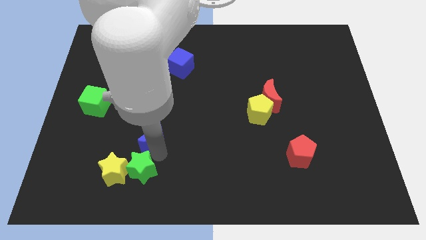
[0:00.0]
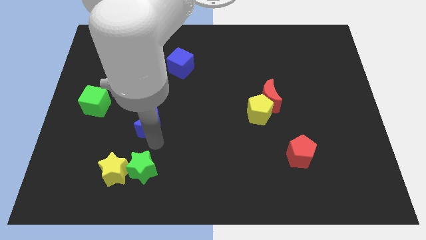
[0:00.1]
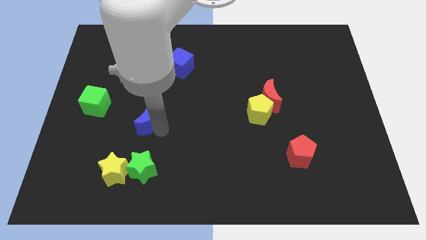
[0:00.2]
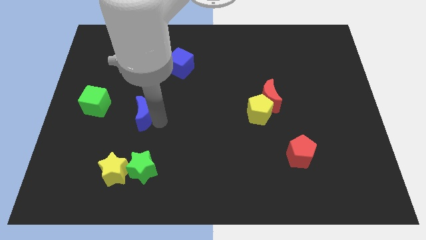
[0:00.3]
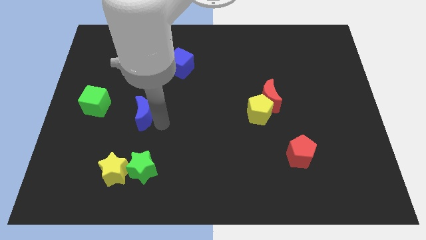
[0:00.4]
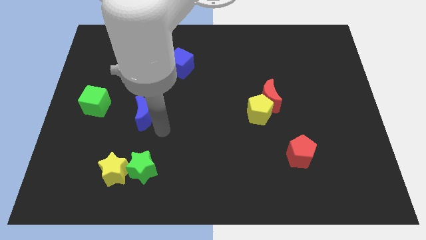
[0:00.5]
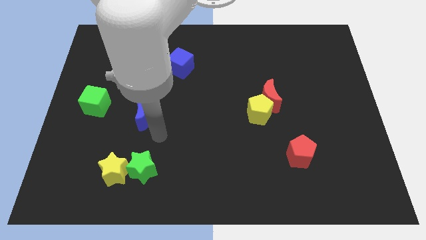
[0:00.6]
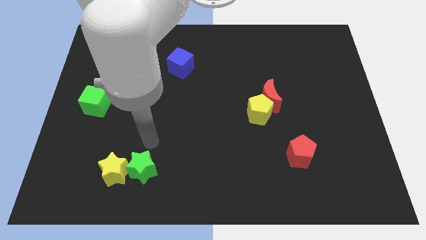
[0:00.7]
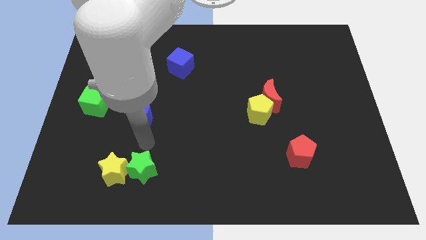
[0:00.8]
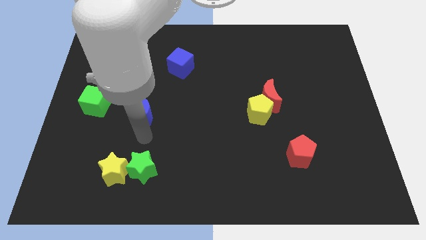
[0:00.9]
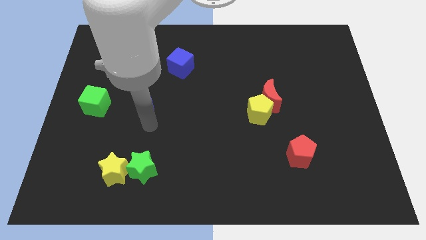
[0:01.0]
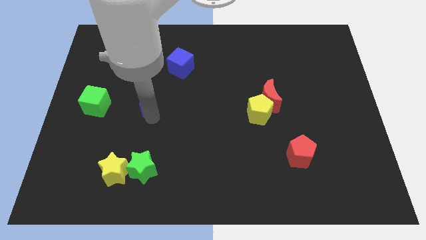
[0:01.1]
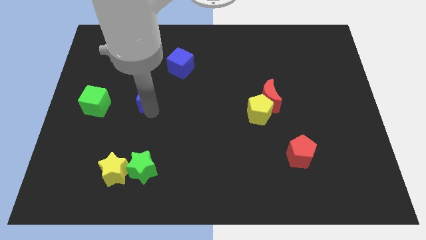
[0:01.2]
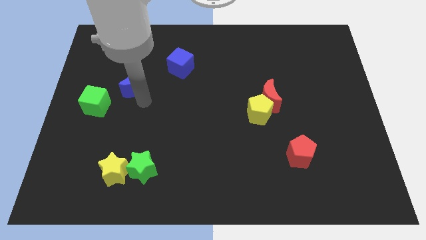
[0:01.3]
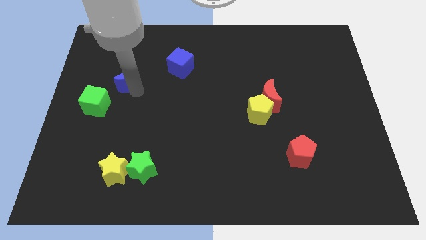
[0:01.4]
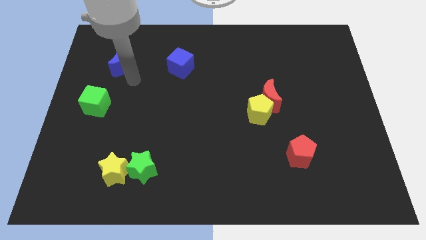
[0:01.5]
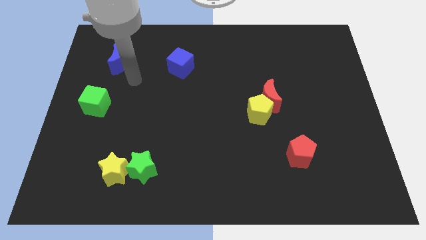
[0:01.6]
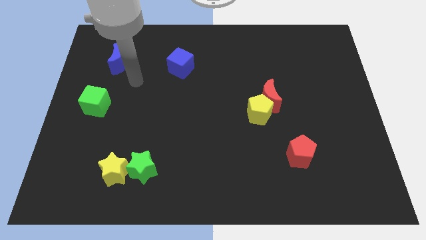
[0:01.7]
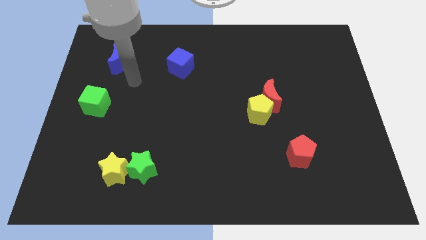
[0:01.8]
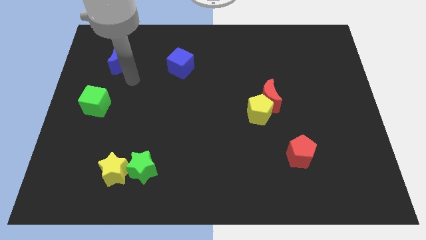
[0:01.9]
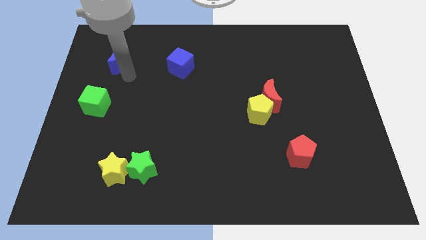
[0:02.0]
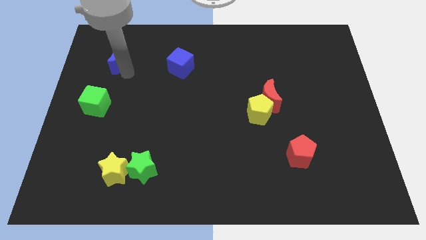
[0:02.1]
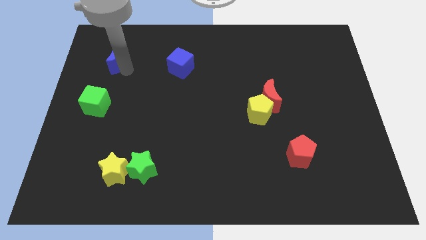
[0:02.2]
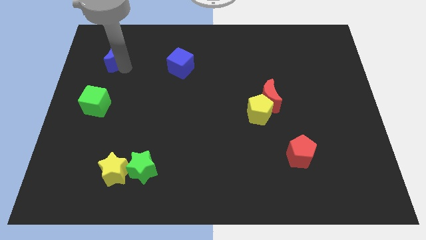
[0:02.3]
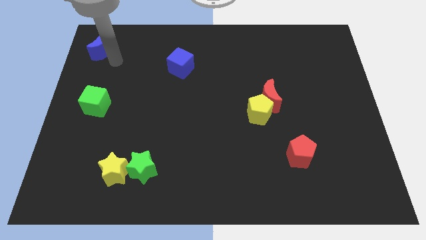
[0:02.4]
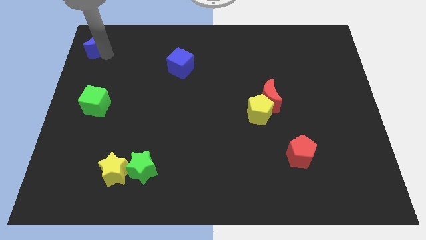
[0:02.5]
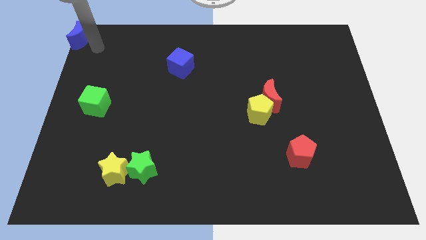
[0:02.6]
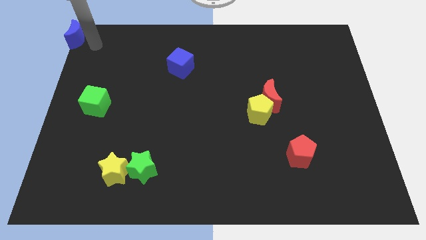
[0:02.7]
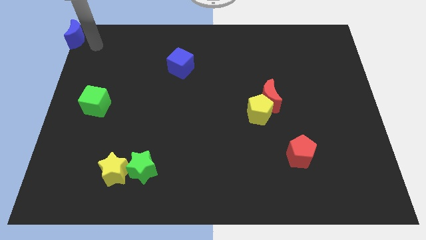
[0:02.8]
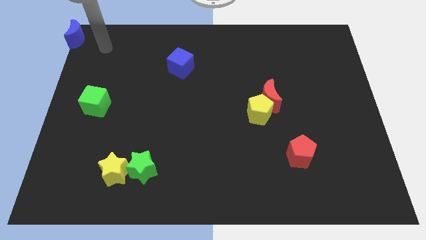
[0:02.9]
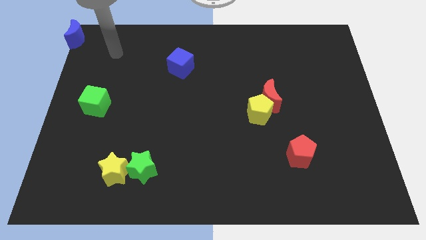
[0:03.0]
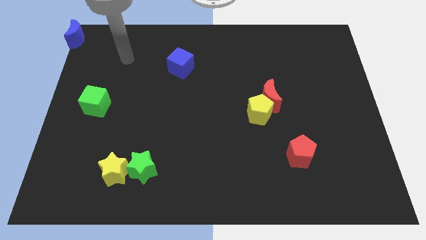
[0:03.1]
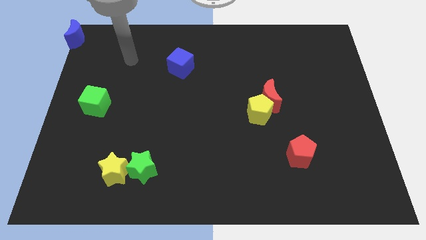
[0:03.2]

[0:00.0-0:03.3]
move the blue crescent to the top left of the board

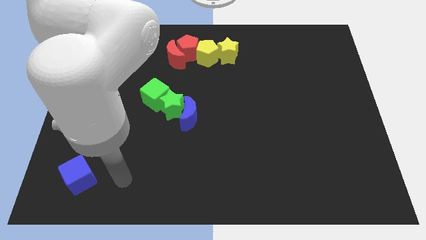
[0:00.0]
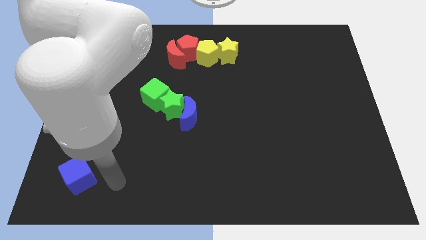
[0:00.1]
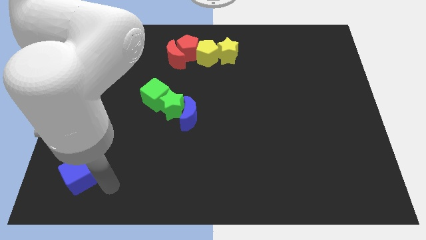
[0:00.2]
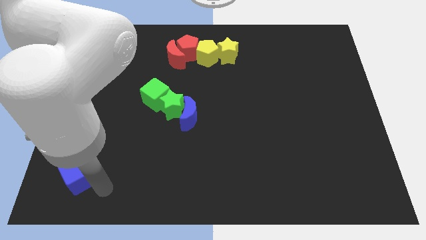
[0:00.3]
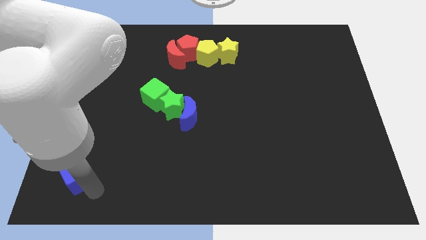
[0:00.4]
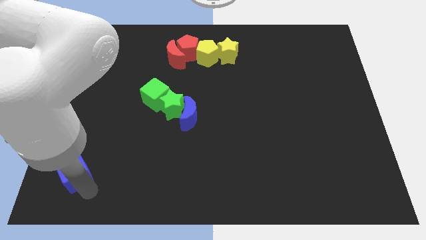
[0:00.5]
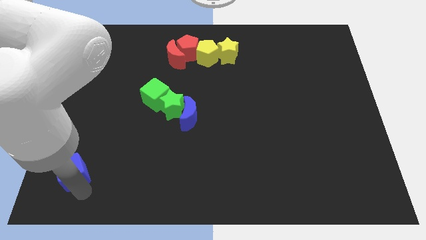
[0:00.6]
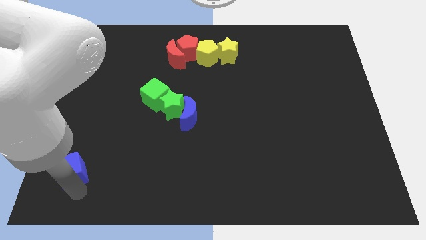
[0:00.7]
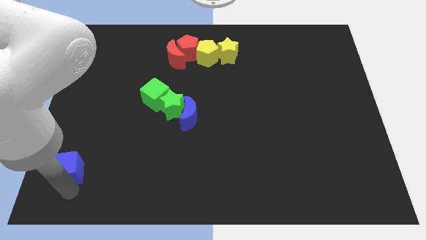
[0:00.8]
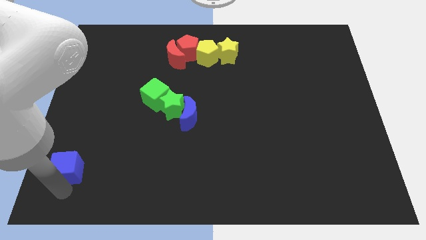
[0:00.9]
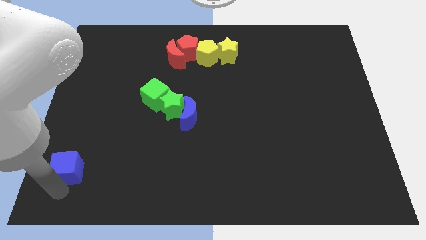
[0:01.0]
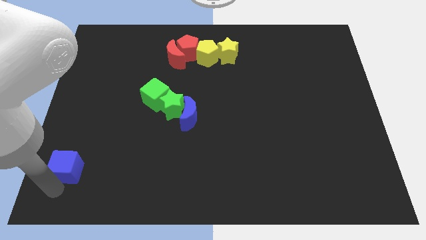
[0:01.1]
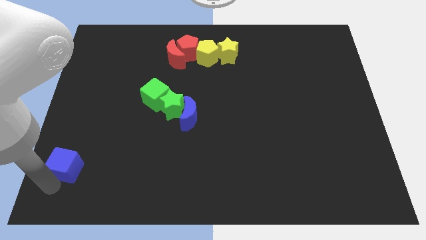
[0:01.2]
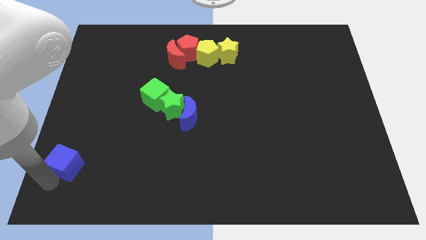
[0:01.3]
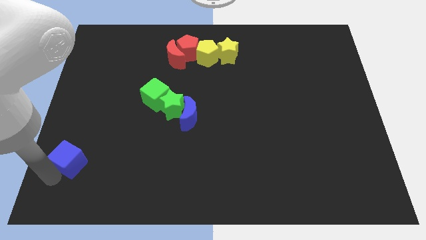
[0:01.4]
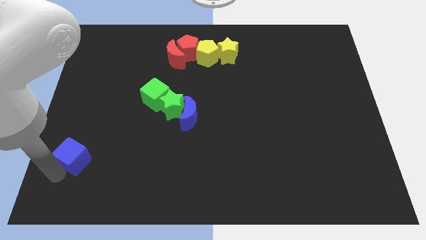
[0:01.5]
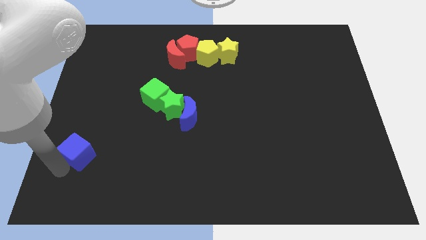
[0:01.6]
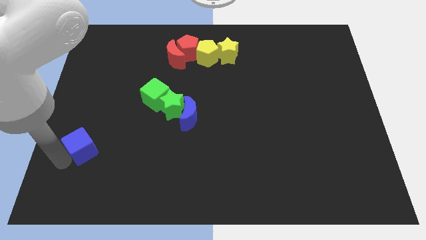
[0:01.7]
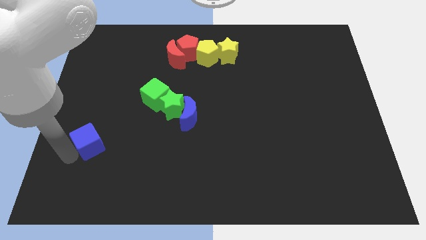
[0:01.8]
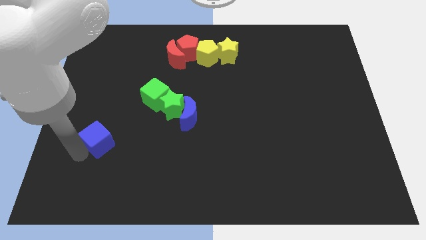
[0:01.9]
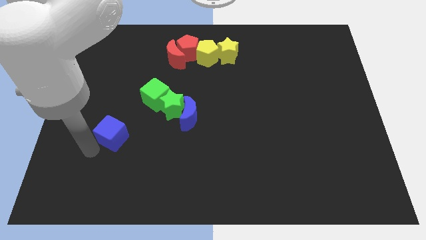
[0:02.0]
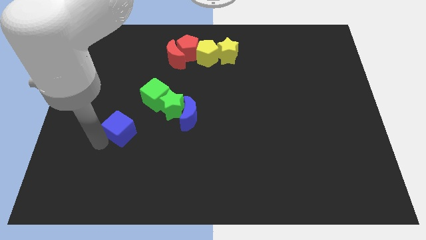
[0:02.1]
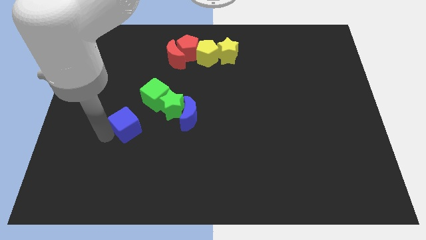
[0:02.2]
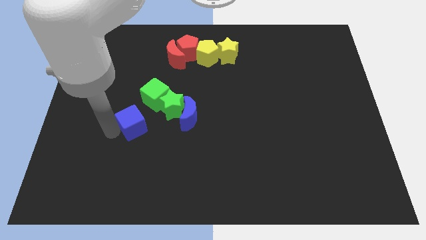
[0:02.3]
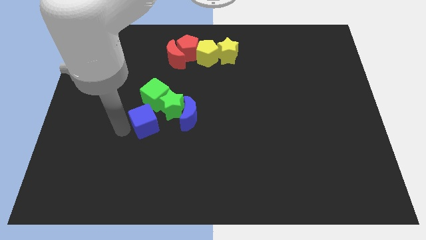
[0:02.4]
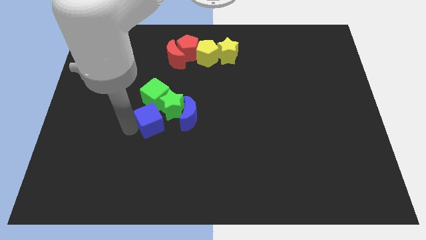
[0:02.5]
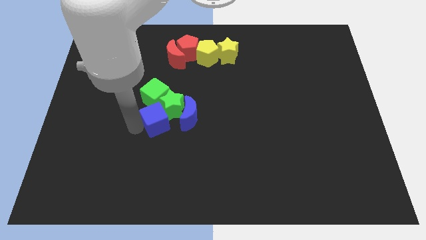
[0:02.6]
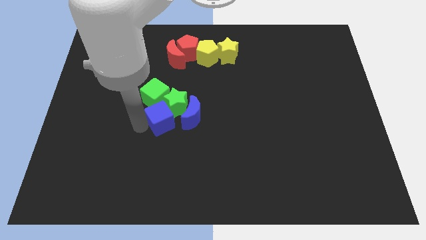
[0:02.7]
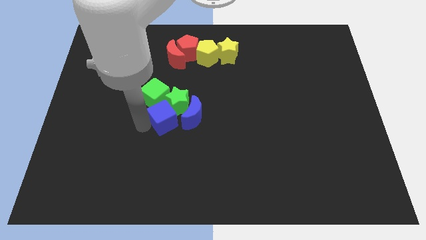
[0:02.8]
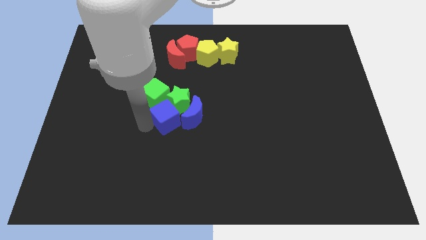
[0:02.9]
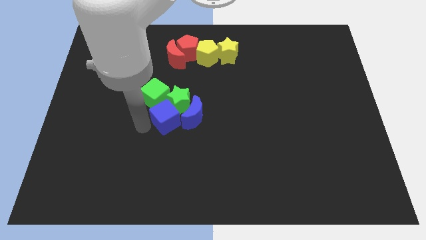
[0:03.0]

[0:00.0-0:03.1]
move the blue cube into the green star

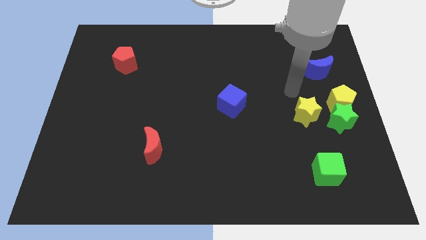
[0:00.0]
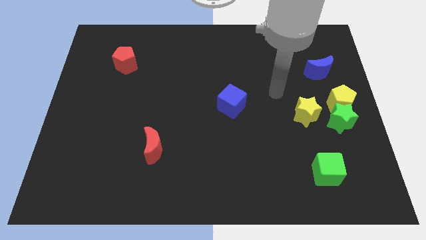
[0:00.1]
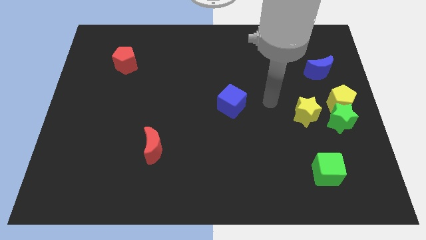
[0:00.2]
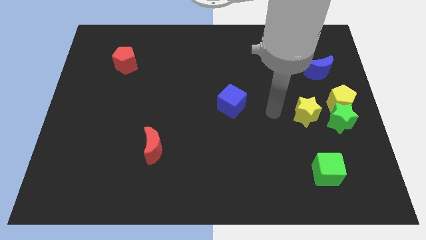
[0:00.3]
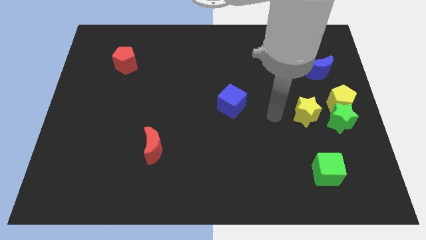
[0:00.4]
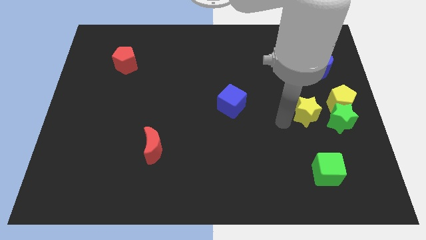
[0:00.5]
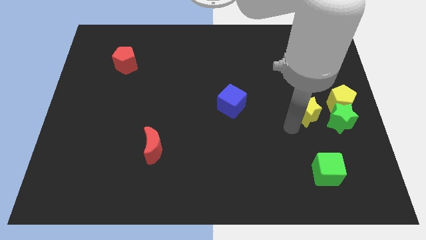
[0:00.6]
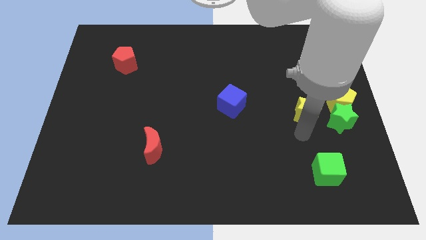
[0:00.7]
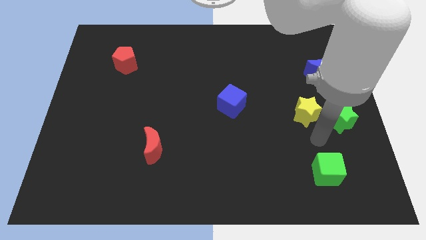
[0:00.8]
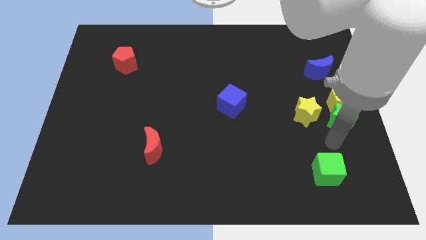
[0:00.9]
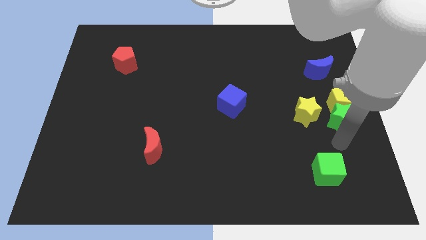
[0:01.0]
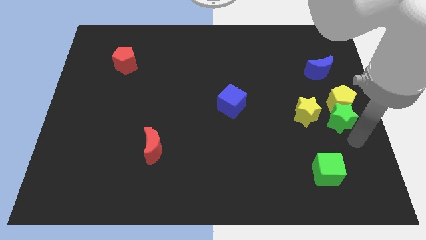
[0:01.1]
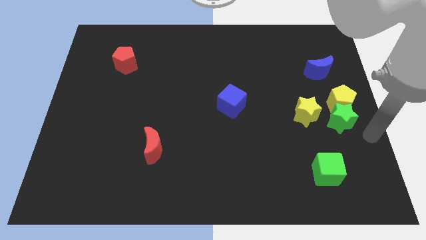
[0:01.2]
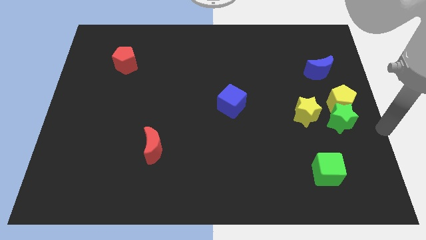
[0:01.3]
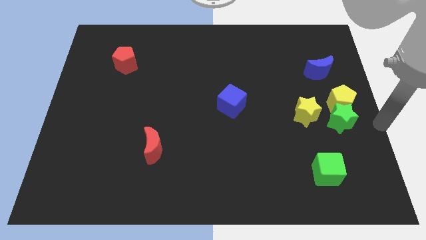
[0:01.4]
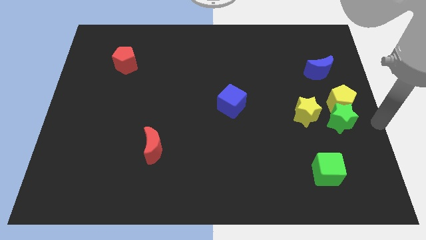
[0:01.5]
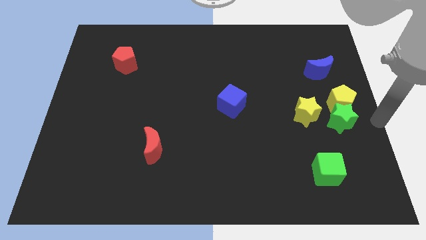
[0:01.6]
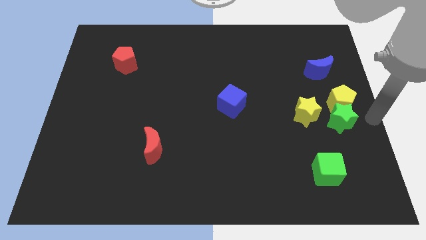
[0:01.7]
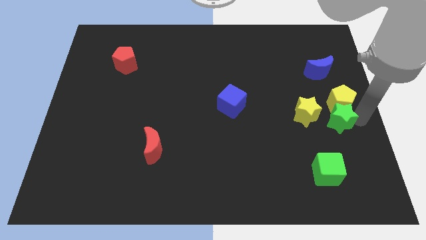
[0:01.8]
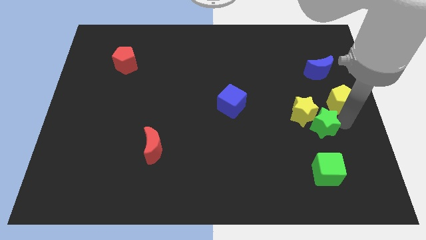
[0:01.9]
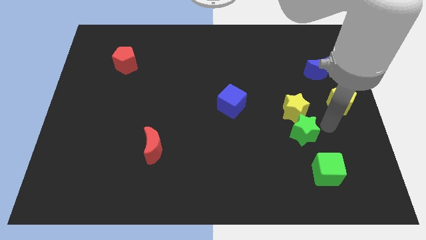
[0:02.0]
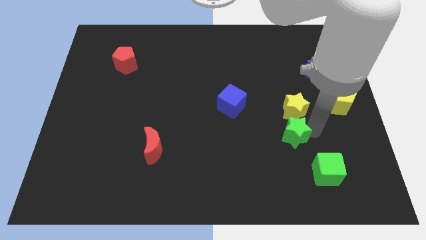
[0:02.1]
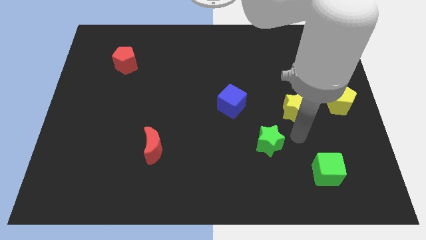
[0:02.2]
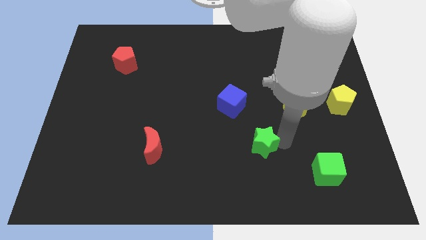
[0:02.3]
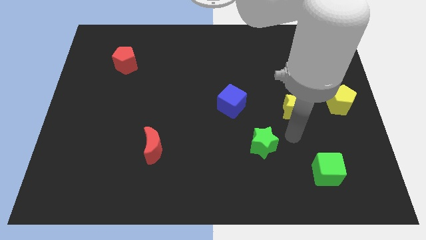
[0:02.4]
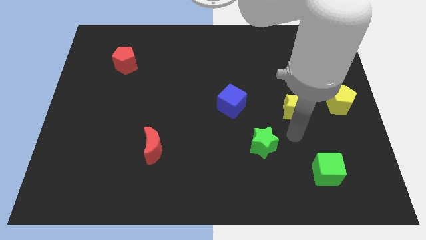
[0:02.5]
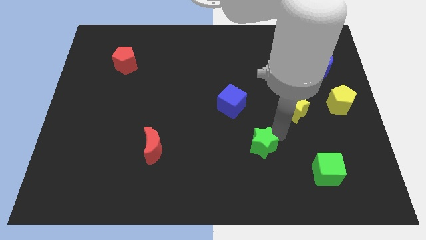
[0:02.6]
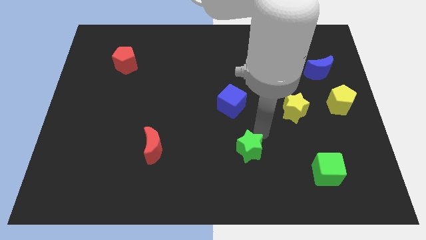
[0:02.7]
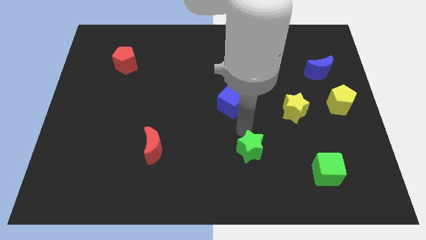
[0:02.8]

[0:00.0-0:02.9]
push the green star below the blue cube
